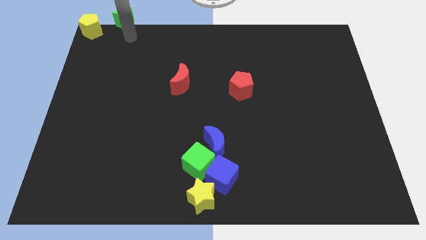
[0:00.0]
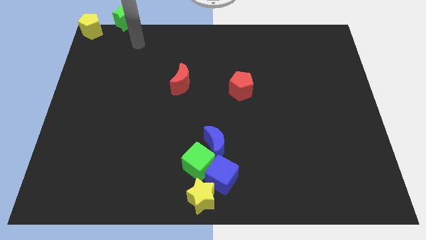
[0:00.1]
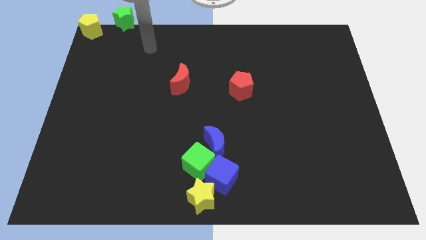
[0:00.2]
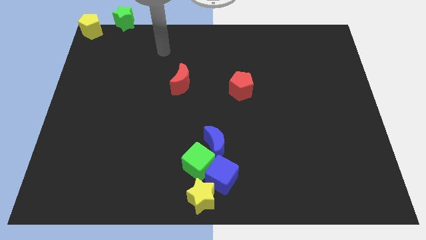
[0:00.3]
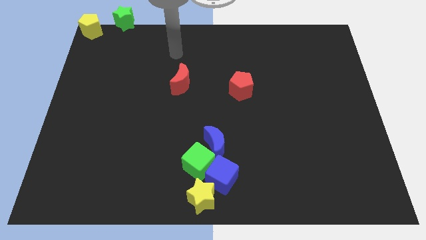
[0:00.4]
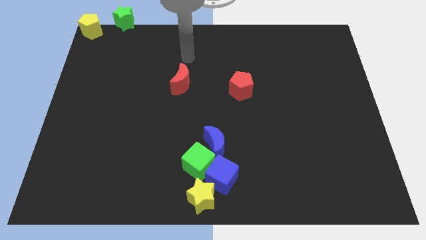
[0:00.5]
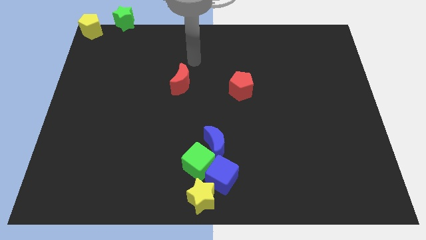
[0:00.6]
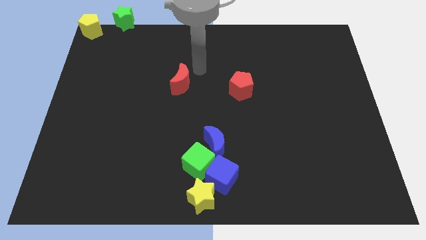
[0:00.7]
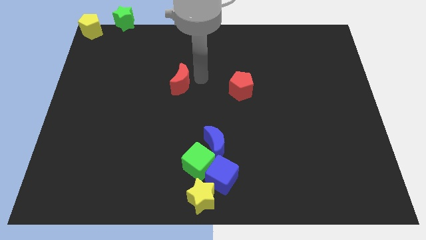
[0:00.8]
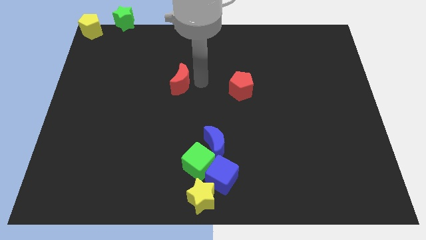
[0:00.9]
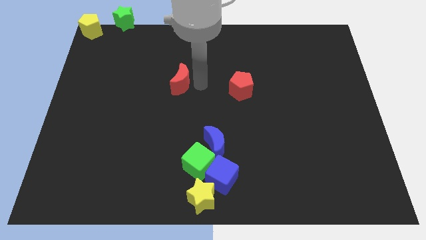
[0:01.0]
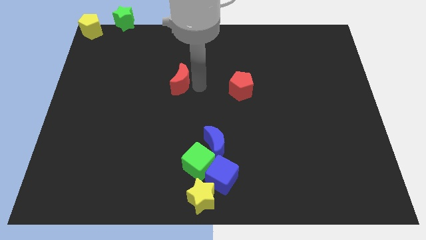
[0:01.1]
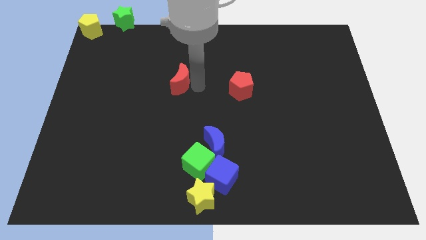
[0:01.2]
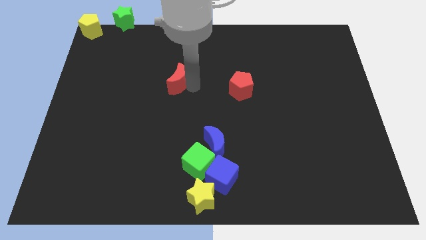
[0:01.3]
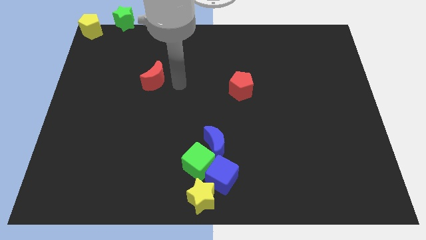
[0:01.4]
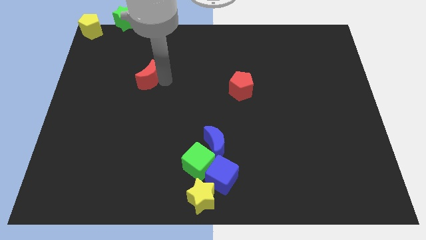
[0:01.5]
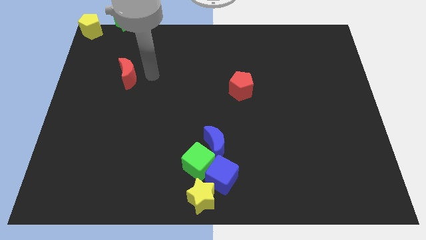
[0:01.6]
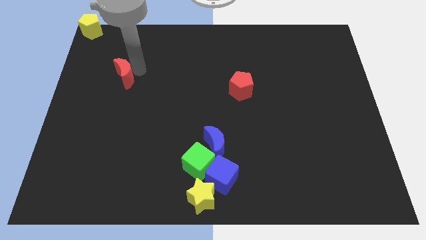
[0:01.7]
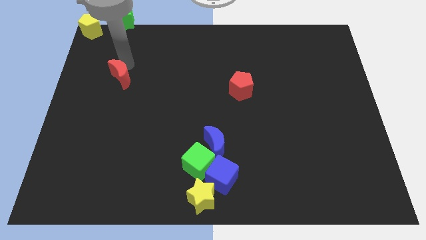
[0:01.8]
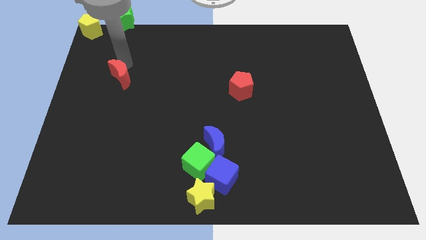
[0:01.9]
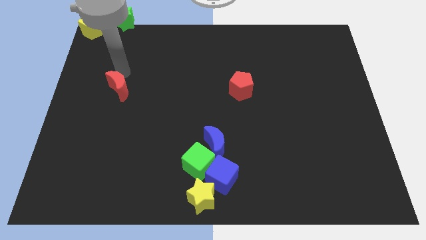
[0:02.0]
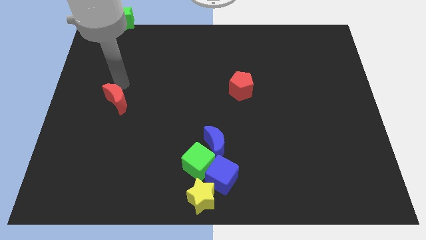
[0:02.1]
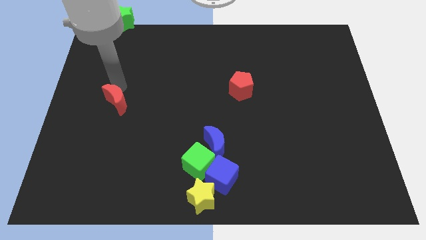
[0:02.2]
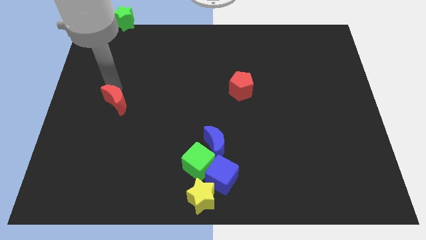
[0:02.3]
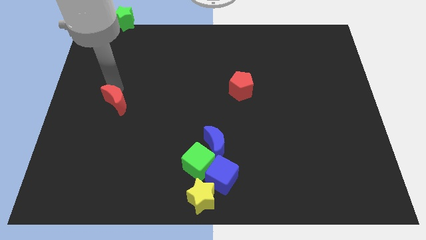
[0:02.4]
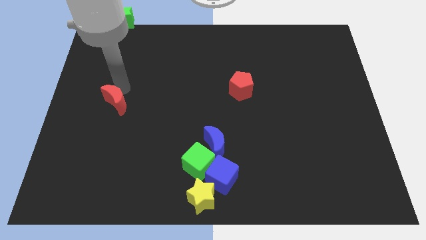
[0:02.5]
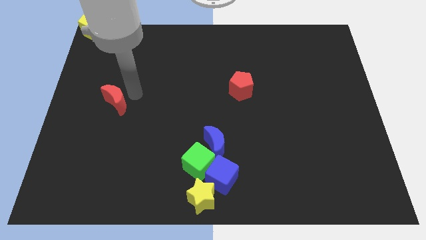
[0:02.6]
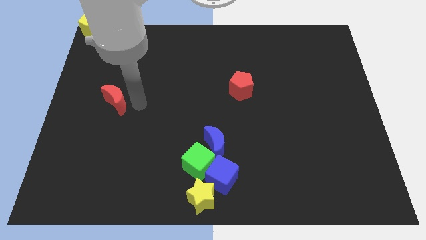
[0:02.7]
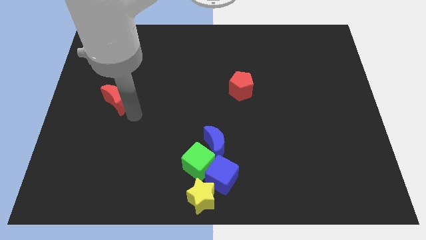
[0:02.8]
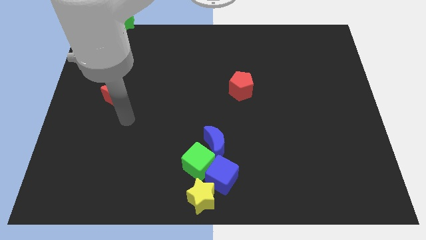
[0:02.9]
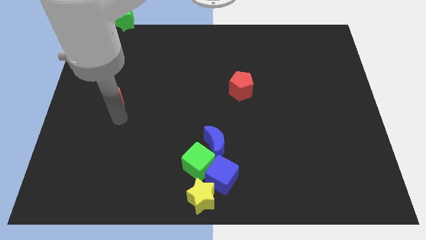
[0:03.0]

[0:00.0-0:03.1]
move the red crescent slightly to the left

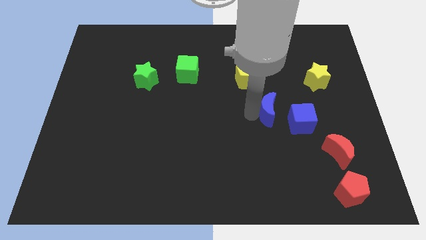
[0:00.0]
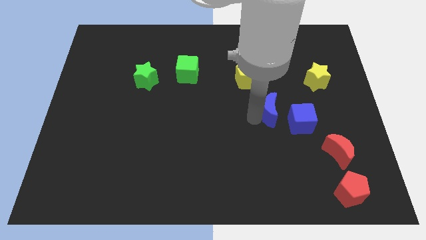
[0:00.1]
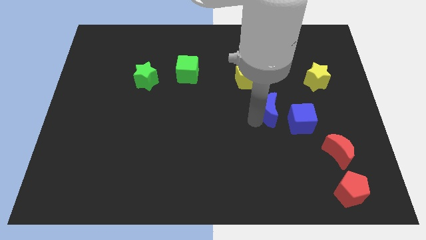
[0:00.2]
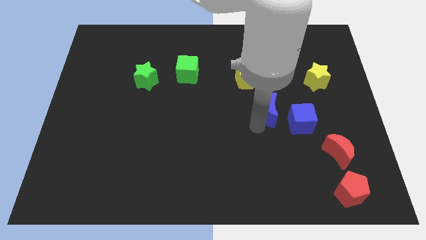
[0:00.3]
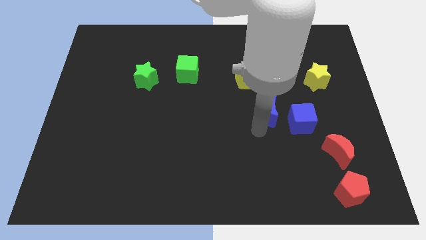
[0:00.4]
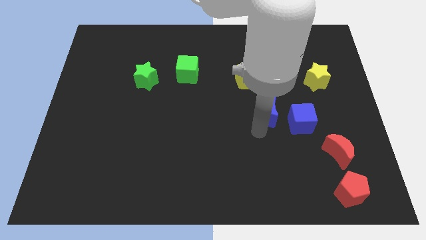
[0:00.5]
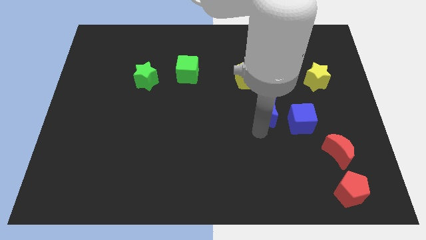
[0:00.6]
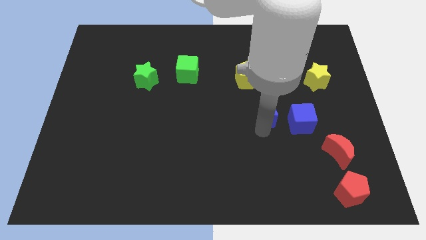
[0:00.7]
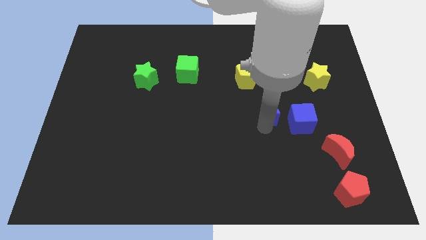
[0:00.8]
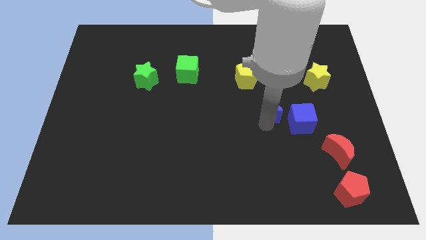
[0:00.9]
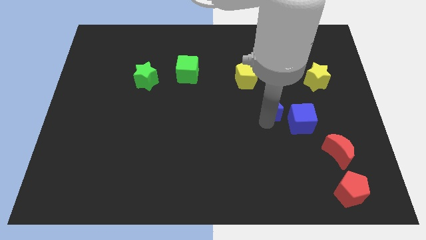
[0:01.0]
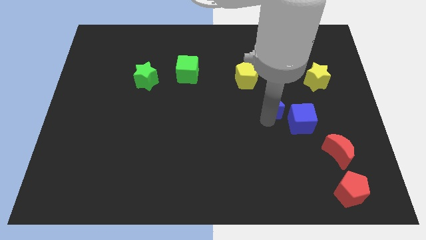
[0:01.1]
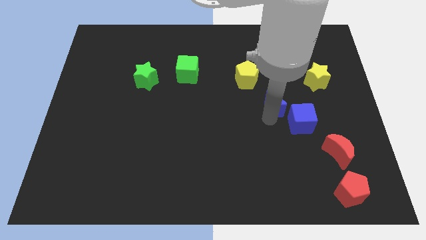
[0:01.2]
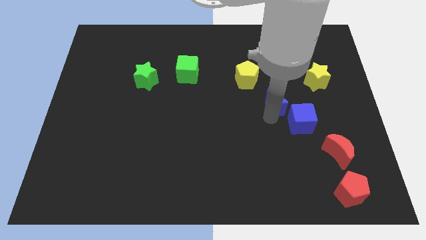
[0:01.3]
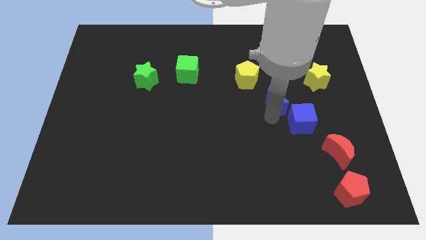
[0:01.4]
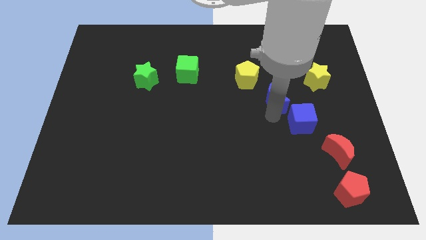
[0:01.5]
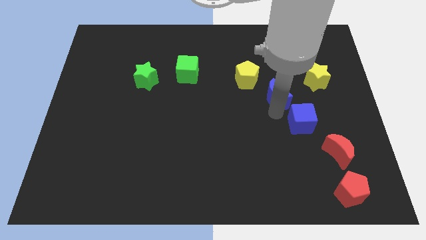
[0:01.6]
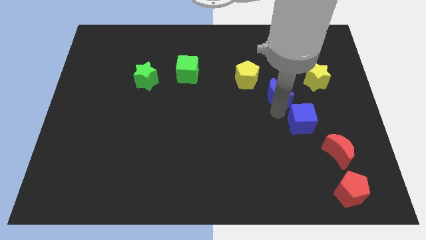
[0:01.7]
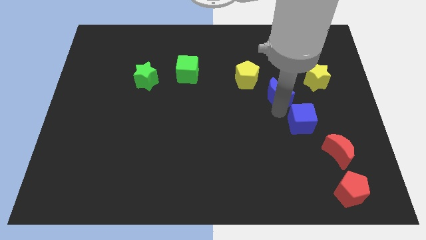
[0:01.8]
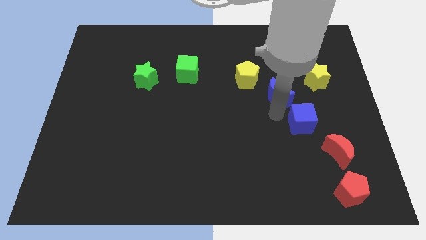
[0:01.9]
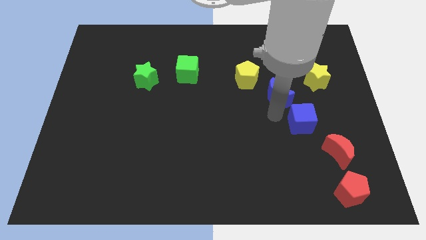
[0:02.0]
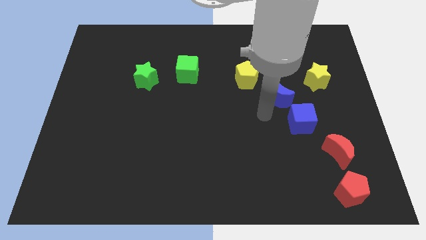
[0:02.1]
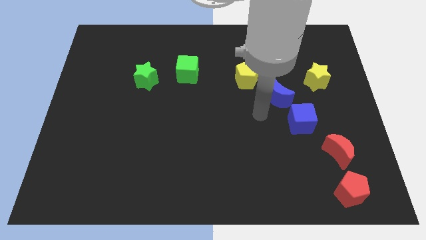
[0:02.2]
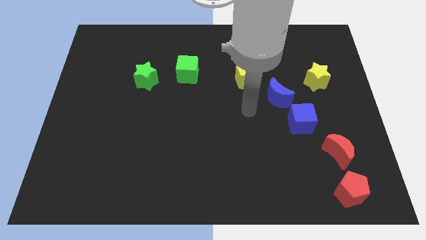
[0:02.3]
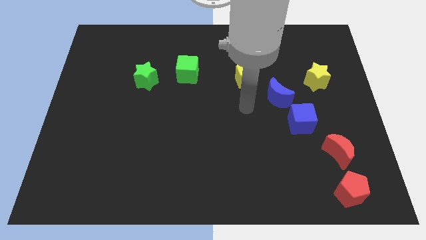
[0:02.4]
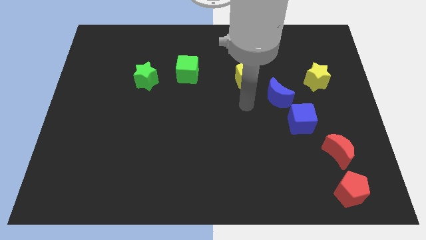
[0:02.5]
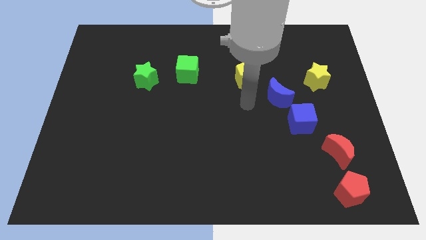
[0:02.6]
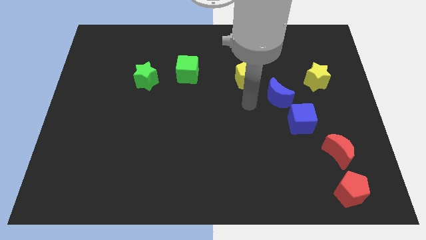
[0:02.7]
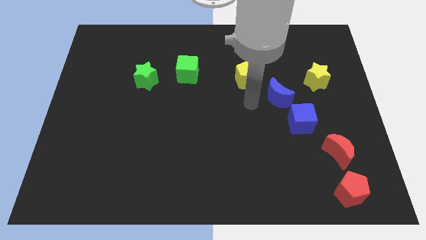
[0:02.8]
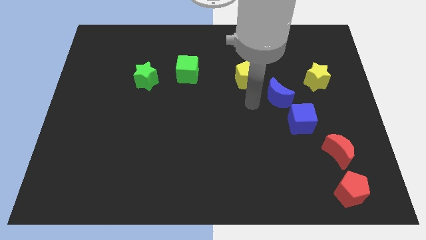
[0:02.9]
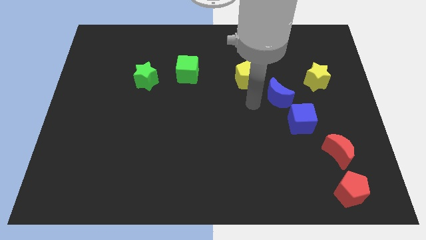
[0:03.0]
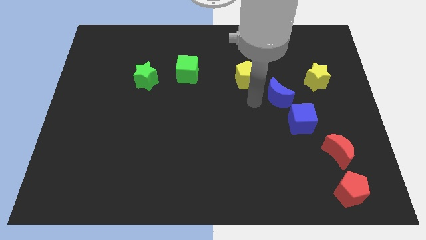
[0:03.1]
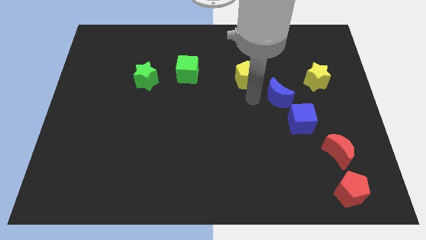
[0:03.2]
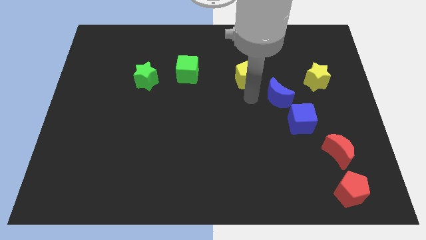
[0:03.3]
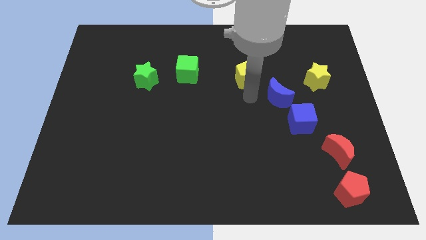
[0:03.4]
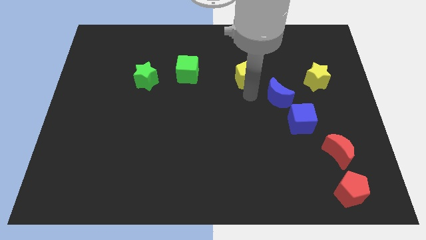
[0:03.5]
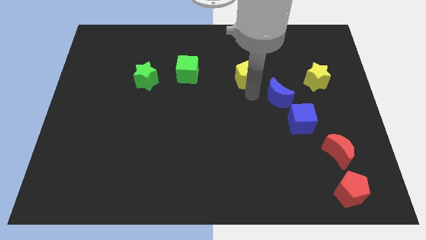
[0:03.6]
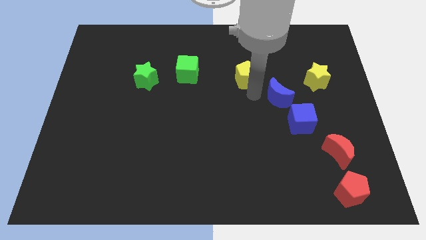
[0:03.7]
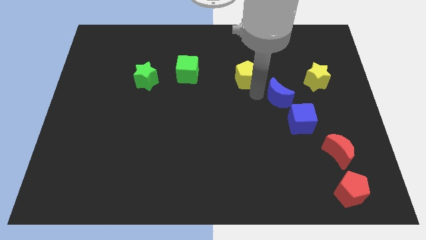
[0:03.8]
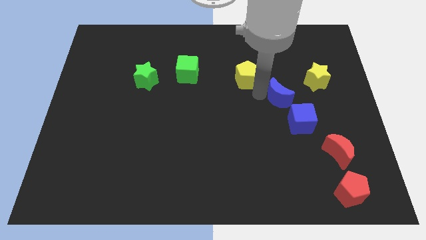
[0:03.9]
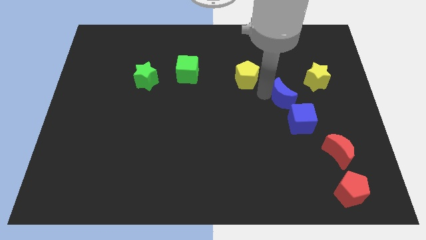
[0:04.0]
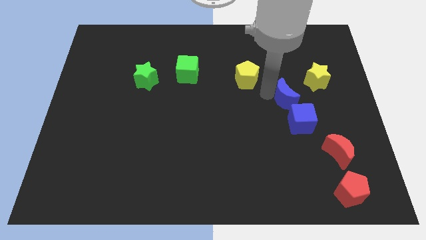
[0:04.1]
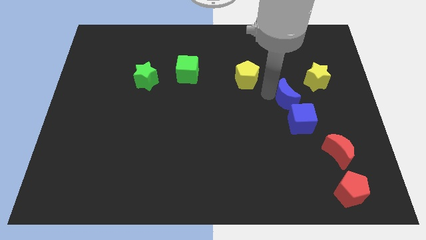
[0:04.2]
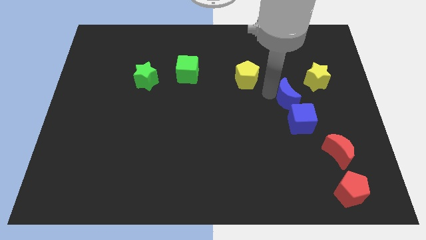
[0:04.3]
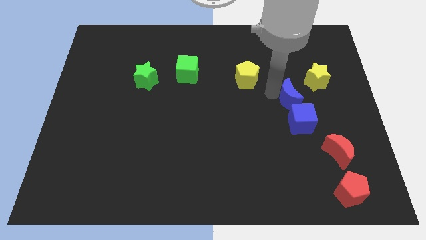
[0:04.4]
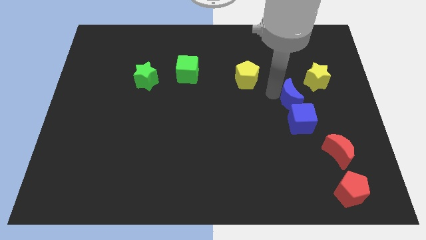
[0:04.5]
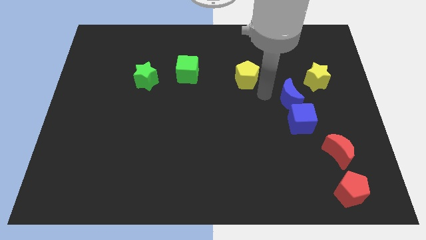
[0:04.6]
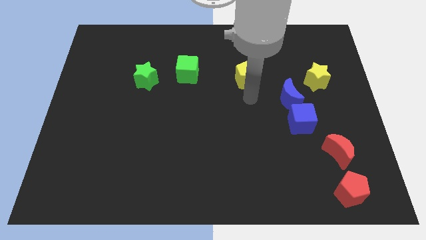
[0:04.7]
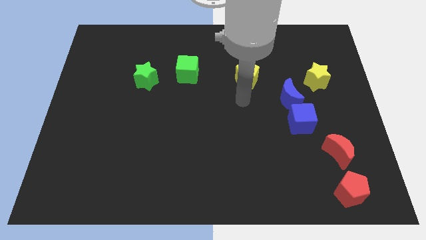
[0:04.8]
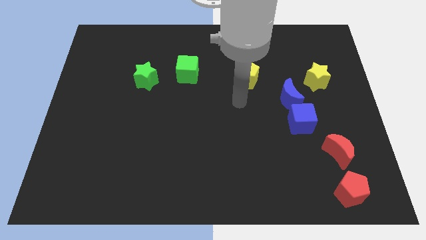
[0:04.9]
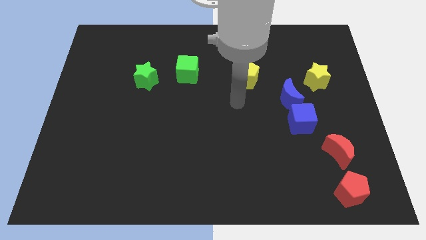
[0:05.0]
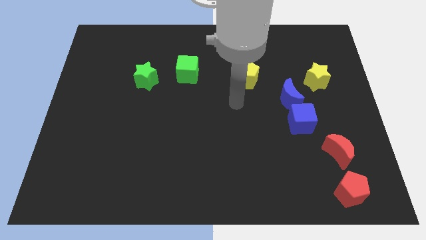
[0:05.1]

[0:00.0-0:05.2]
put the blue crescent vertically above the blue cube

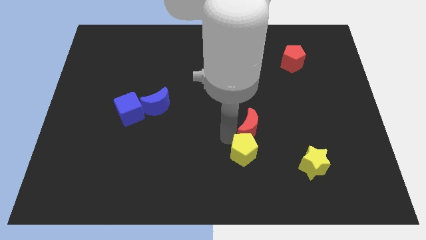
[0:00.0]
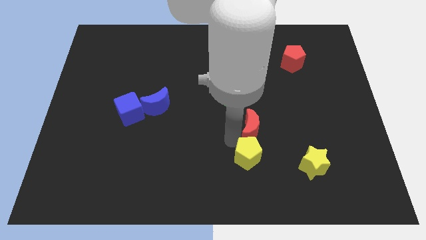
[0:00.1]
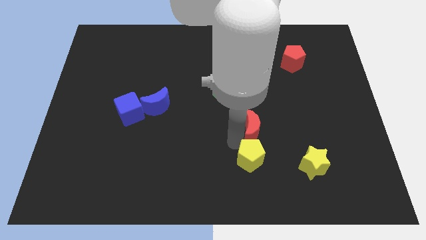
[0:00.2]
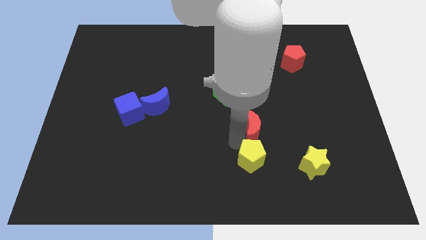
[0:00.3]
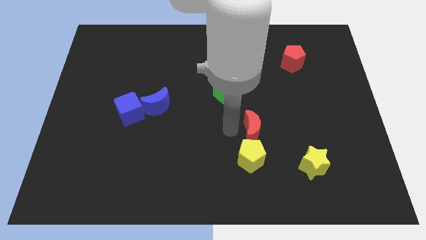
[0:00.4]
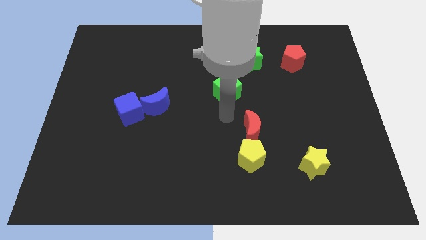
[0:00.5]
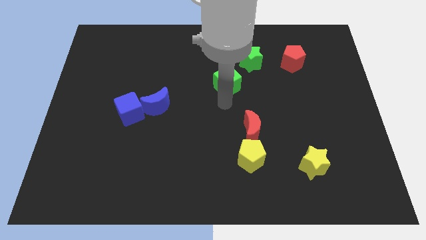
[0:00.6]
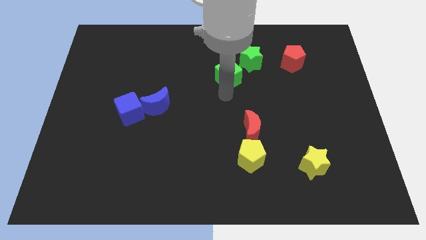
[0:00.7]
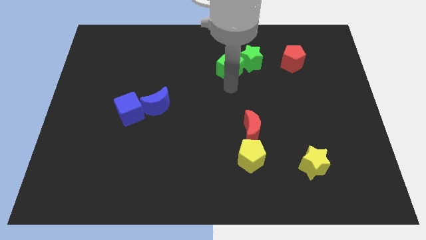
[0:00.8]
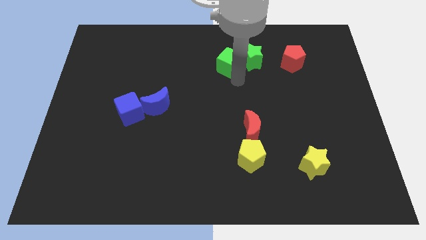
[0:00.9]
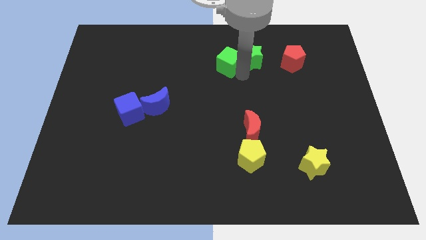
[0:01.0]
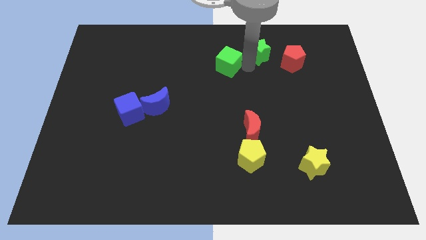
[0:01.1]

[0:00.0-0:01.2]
push green cube close to the green star
